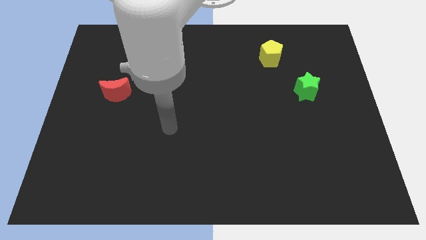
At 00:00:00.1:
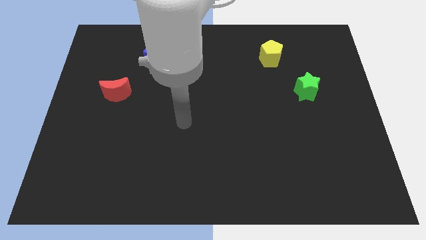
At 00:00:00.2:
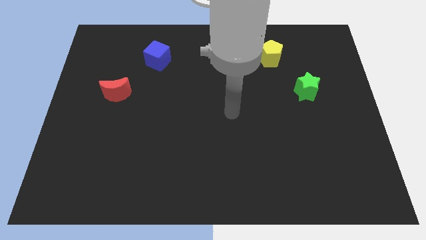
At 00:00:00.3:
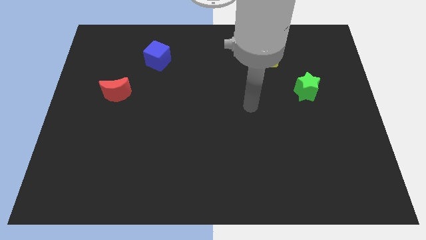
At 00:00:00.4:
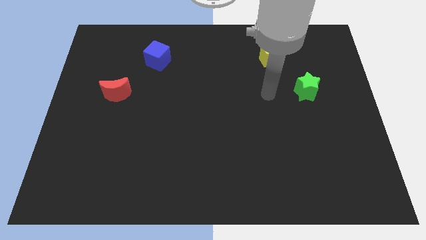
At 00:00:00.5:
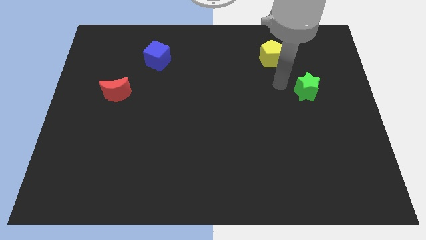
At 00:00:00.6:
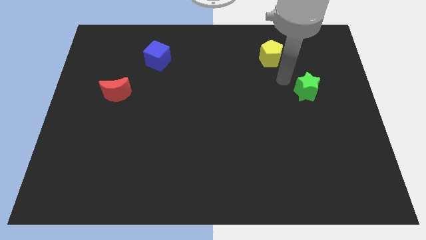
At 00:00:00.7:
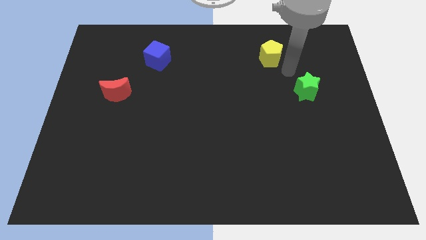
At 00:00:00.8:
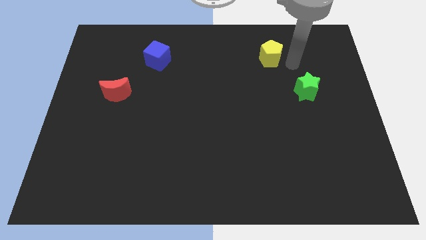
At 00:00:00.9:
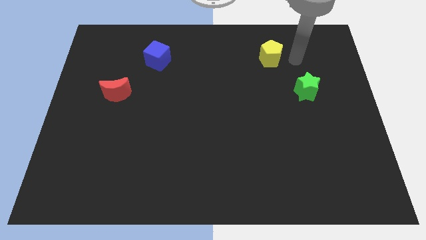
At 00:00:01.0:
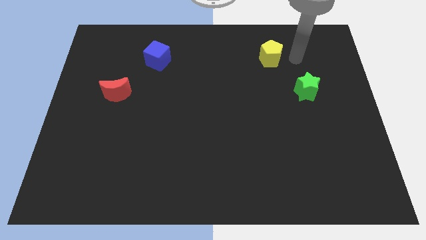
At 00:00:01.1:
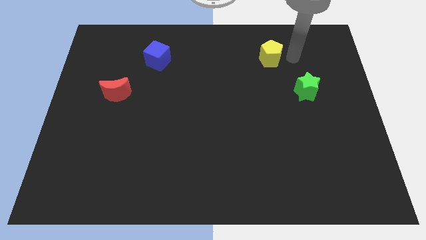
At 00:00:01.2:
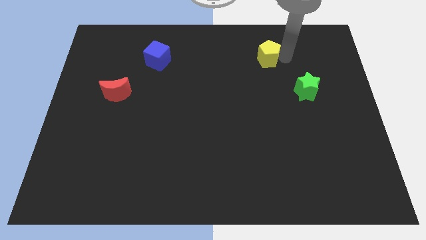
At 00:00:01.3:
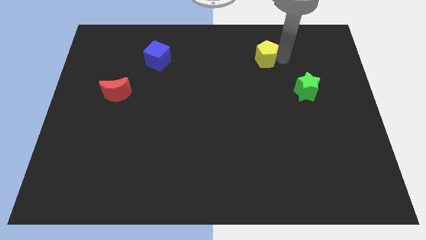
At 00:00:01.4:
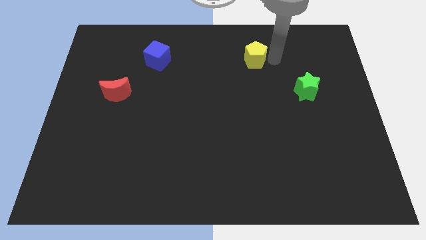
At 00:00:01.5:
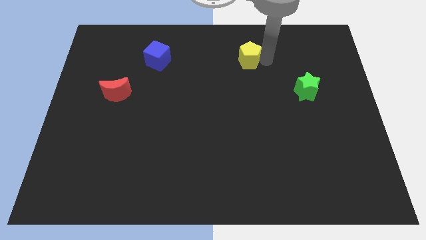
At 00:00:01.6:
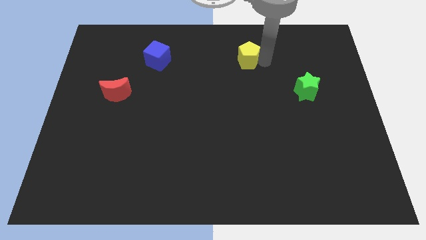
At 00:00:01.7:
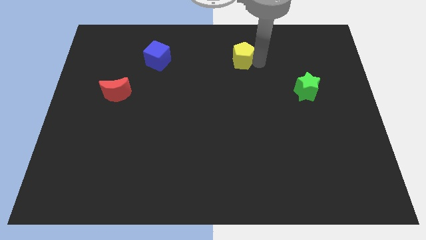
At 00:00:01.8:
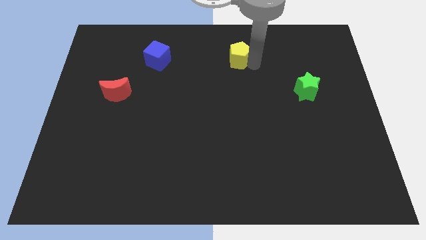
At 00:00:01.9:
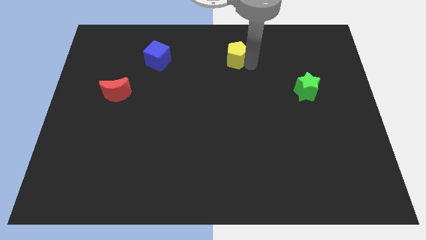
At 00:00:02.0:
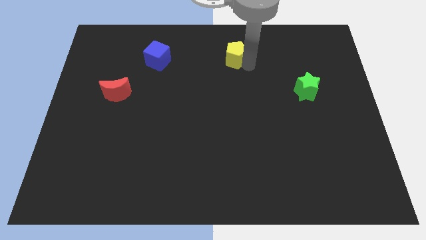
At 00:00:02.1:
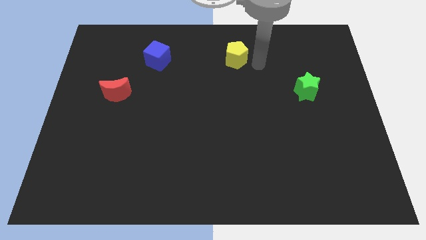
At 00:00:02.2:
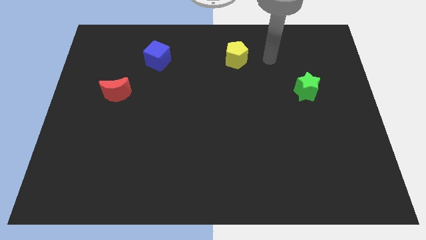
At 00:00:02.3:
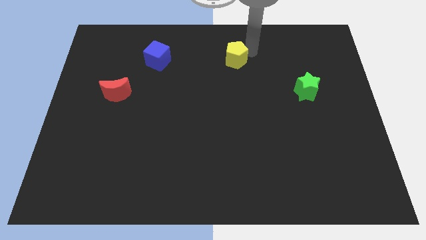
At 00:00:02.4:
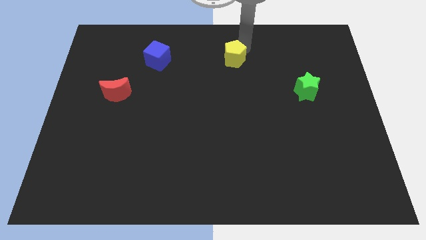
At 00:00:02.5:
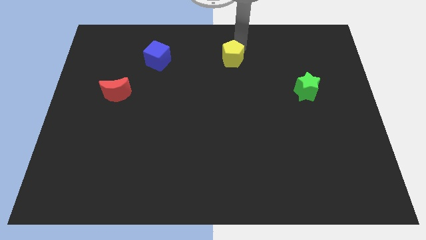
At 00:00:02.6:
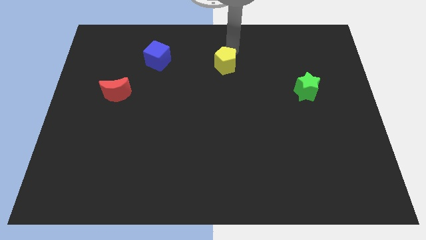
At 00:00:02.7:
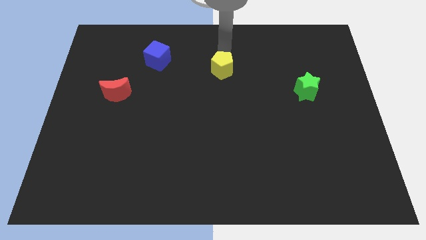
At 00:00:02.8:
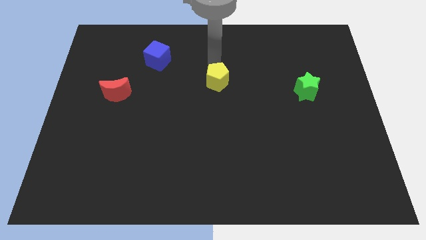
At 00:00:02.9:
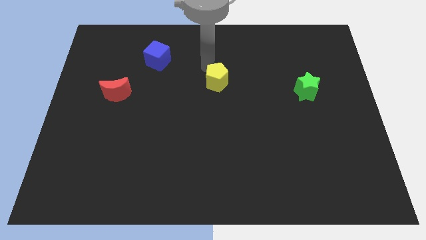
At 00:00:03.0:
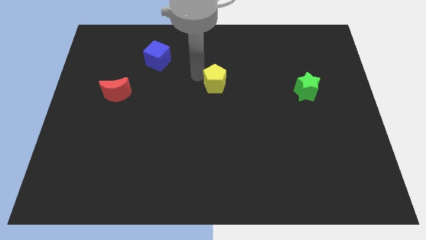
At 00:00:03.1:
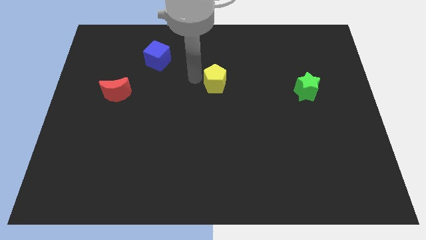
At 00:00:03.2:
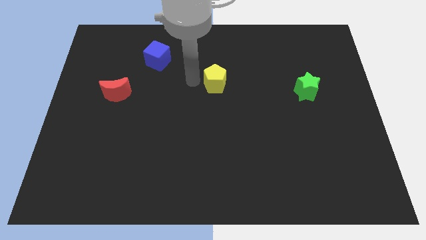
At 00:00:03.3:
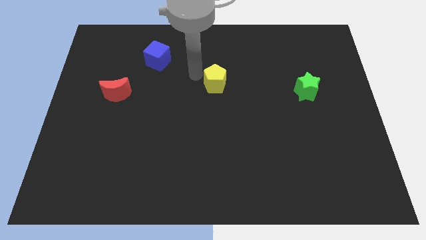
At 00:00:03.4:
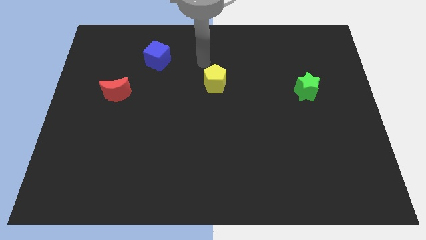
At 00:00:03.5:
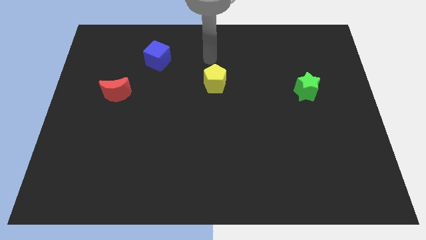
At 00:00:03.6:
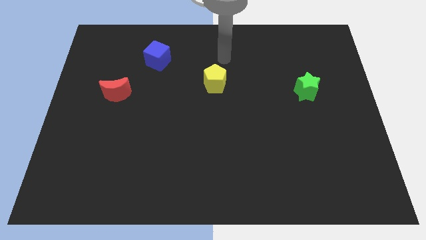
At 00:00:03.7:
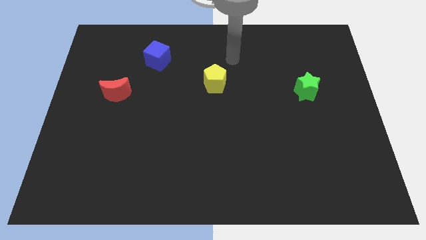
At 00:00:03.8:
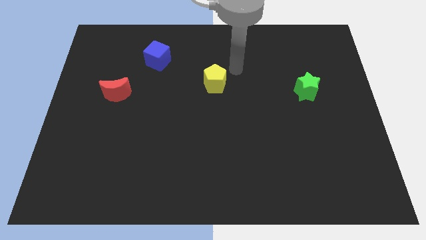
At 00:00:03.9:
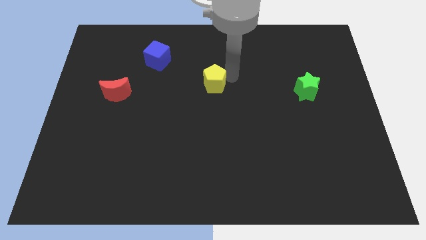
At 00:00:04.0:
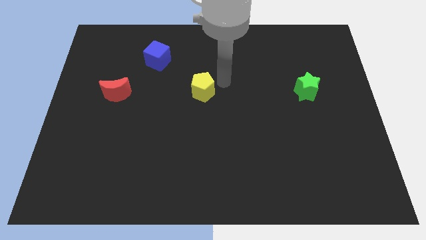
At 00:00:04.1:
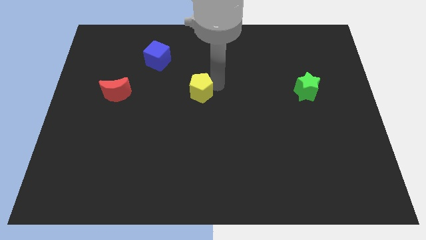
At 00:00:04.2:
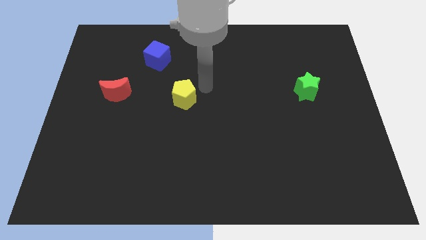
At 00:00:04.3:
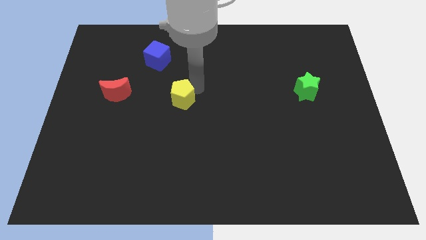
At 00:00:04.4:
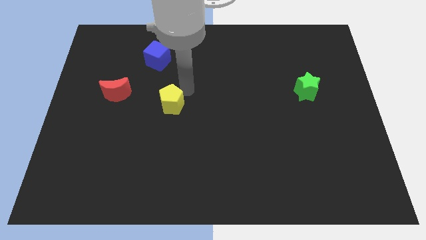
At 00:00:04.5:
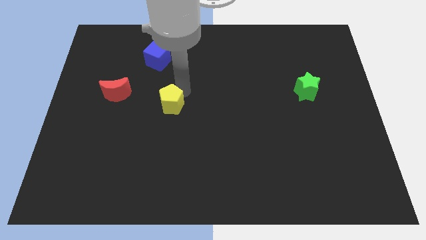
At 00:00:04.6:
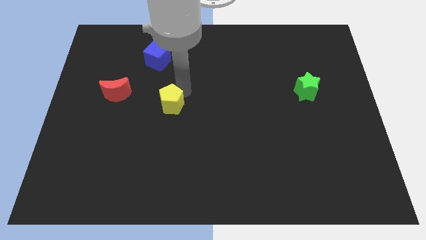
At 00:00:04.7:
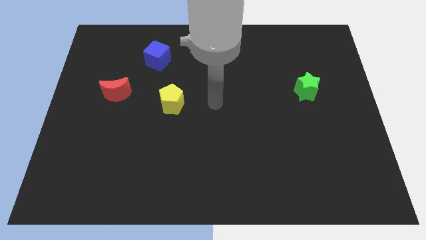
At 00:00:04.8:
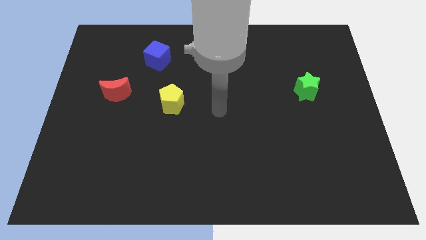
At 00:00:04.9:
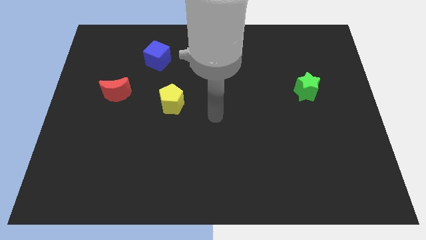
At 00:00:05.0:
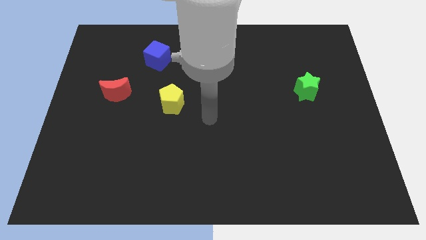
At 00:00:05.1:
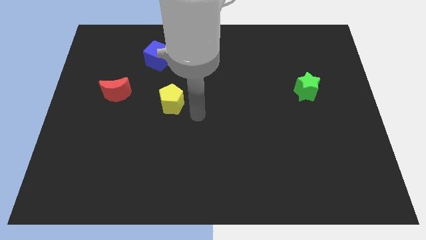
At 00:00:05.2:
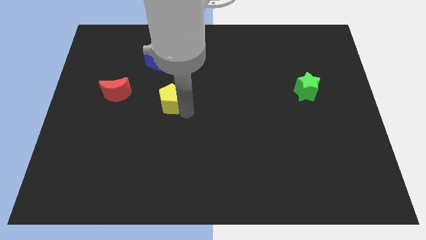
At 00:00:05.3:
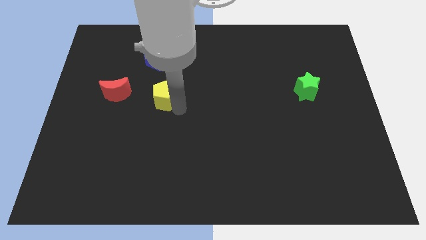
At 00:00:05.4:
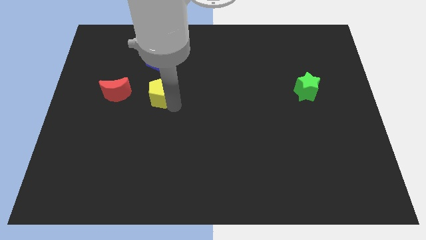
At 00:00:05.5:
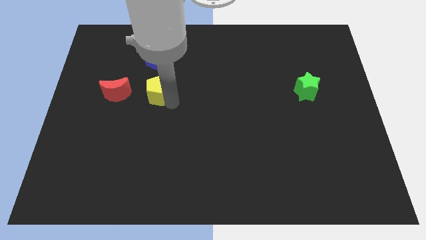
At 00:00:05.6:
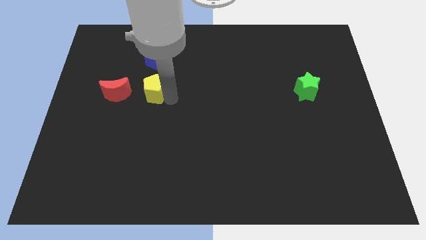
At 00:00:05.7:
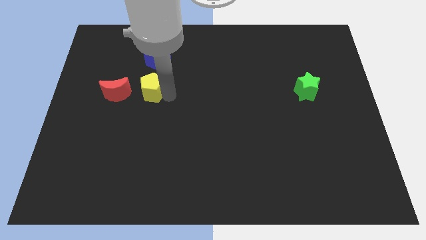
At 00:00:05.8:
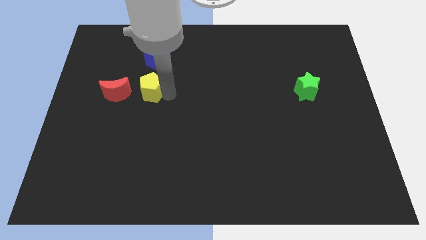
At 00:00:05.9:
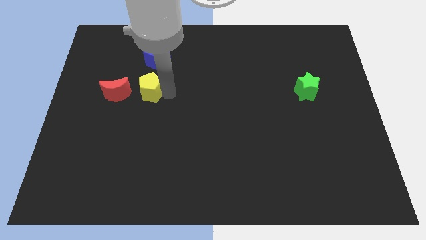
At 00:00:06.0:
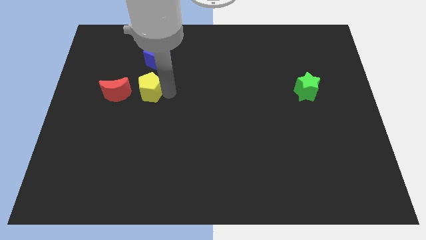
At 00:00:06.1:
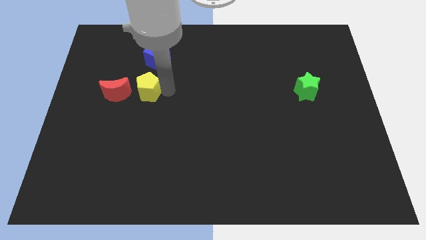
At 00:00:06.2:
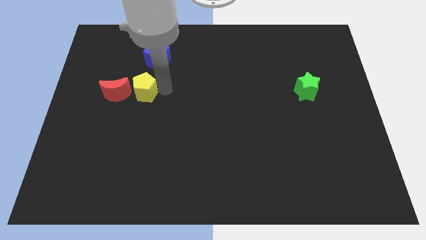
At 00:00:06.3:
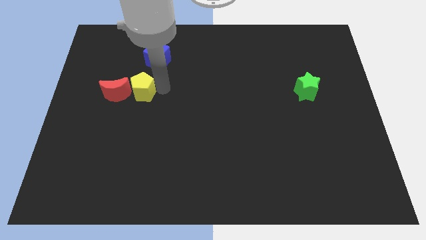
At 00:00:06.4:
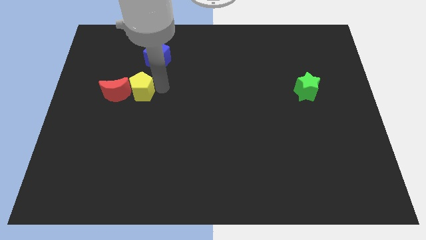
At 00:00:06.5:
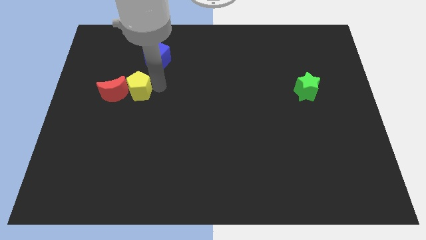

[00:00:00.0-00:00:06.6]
move the yellow block towards the red moon

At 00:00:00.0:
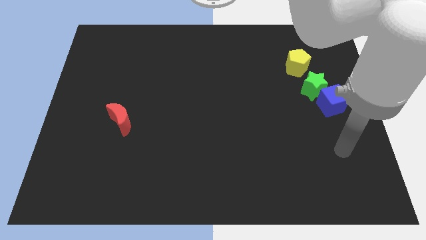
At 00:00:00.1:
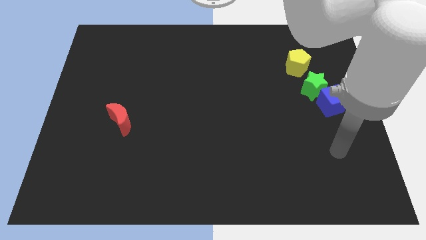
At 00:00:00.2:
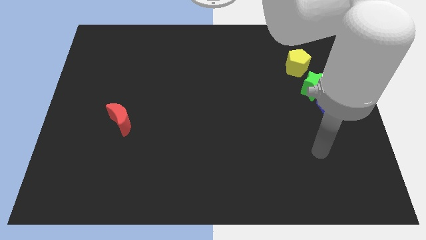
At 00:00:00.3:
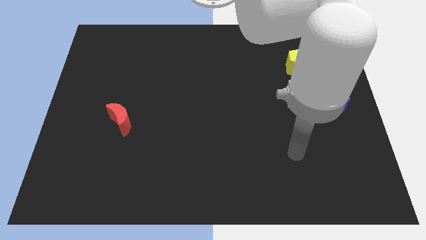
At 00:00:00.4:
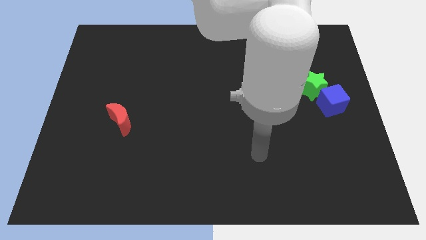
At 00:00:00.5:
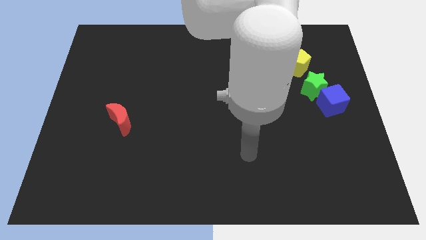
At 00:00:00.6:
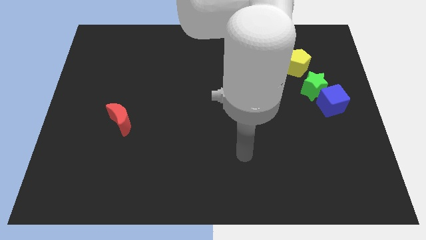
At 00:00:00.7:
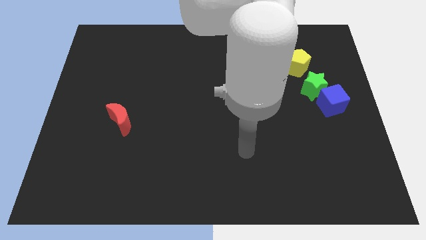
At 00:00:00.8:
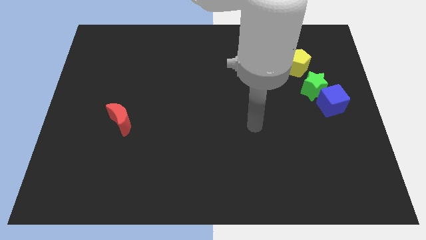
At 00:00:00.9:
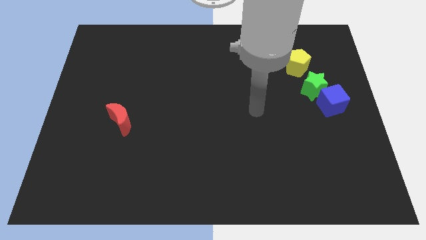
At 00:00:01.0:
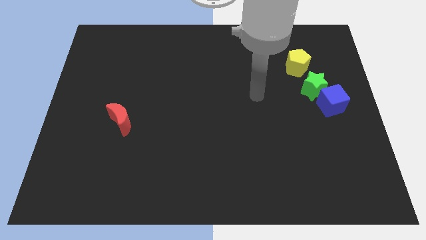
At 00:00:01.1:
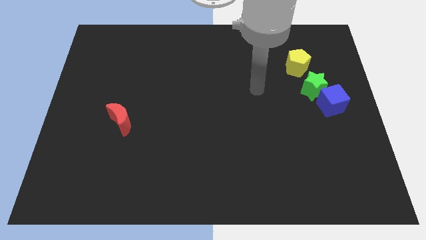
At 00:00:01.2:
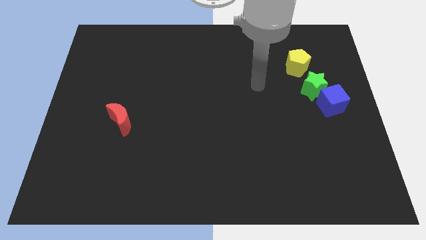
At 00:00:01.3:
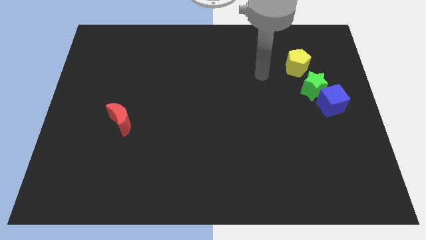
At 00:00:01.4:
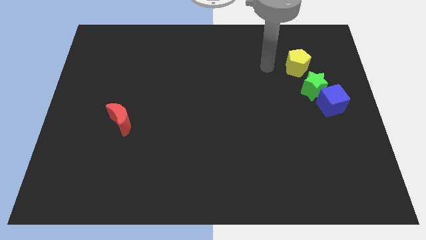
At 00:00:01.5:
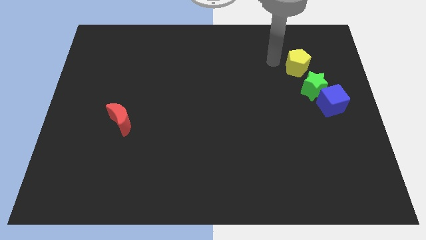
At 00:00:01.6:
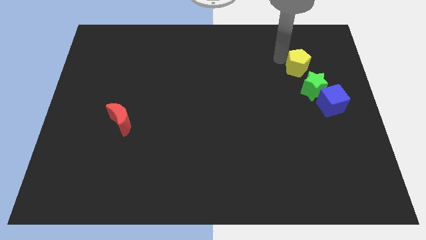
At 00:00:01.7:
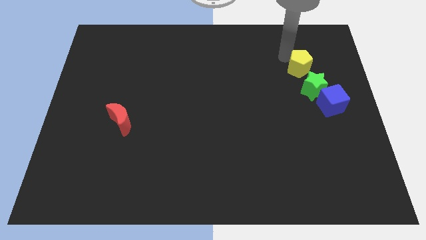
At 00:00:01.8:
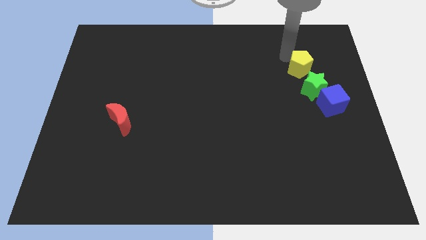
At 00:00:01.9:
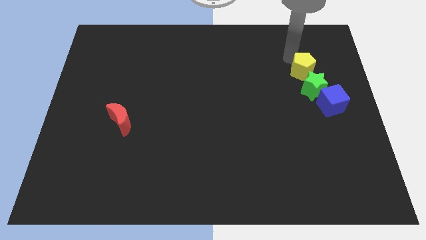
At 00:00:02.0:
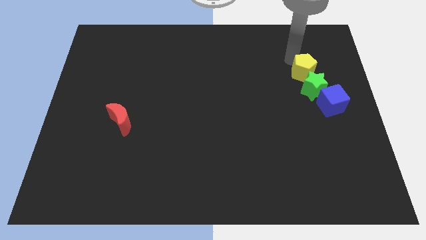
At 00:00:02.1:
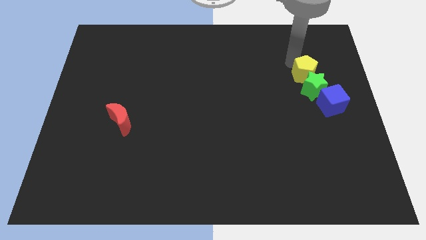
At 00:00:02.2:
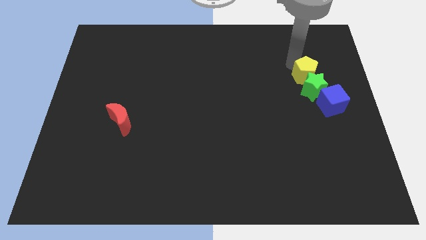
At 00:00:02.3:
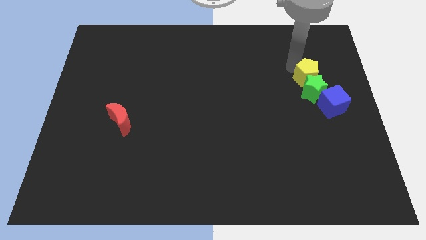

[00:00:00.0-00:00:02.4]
slide the pentagon next to the green star
